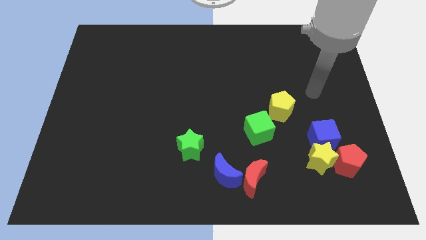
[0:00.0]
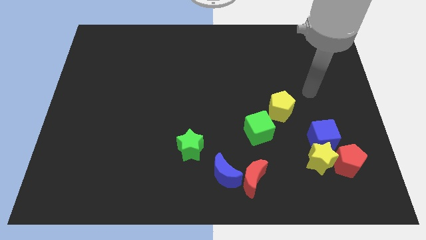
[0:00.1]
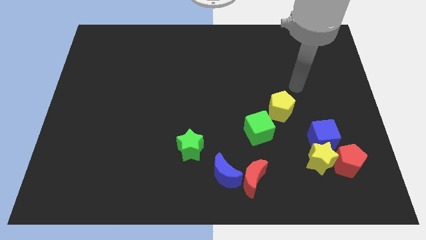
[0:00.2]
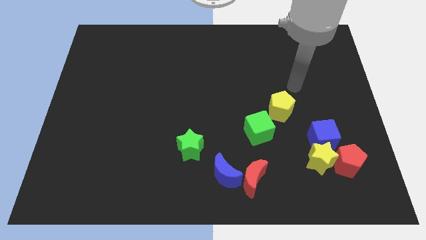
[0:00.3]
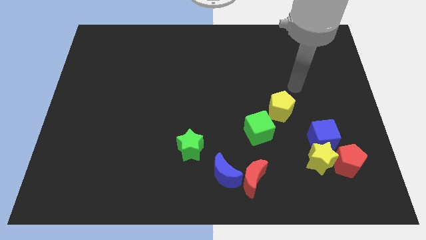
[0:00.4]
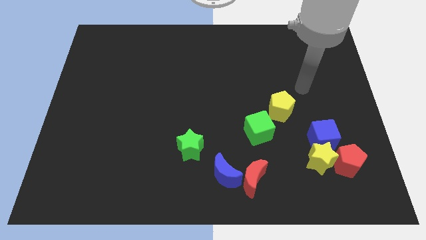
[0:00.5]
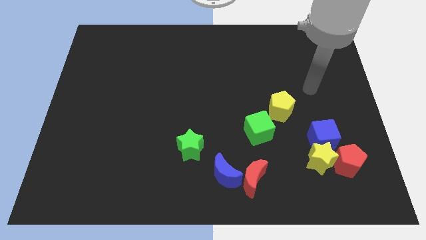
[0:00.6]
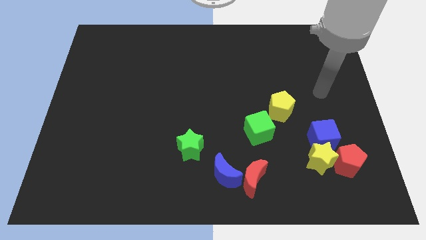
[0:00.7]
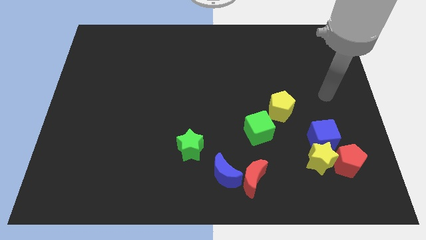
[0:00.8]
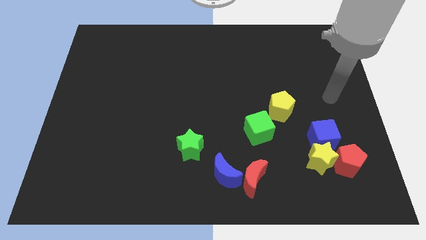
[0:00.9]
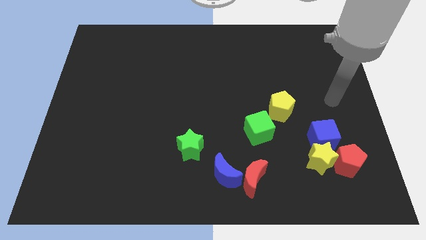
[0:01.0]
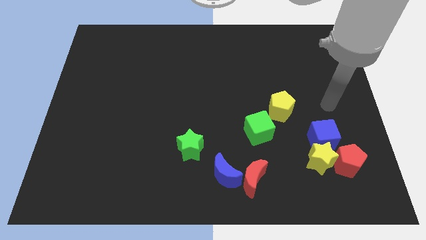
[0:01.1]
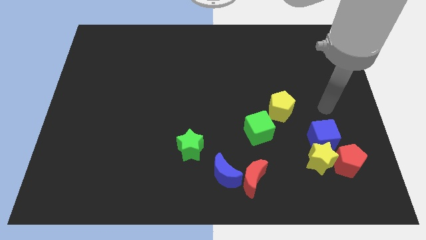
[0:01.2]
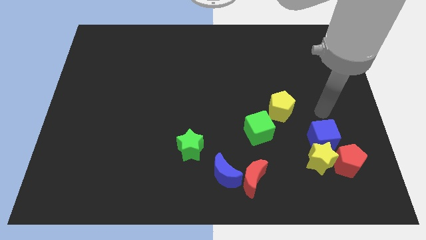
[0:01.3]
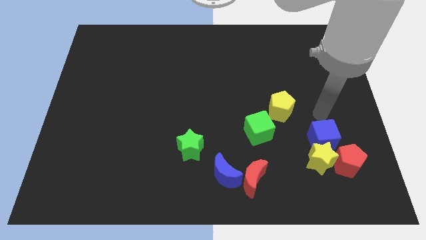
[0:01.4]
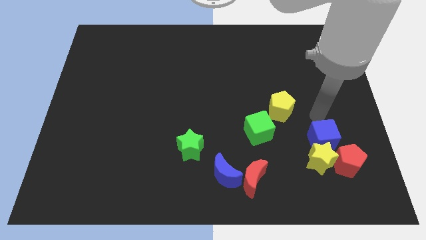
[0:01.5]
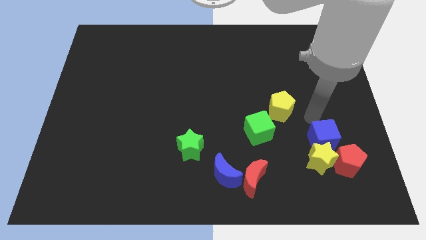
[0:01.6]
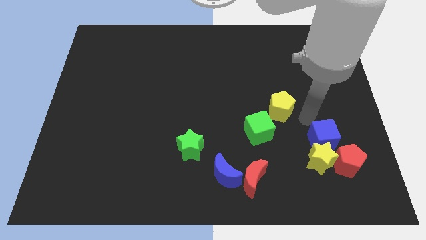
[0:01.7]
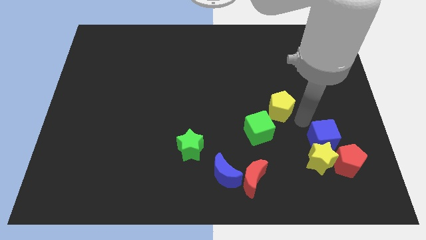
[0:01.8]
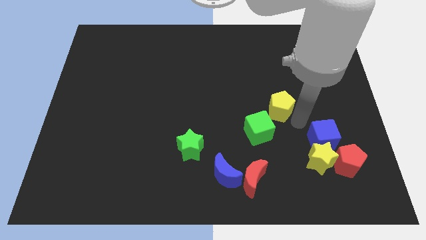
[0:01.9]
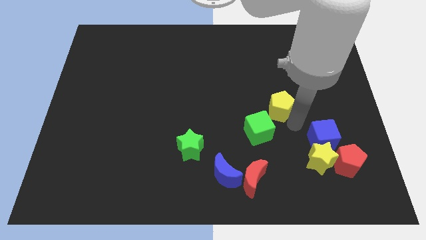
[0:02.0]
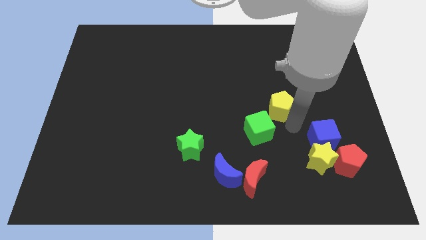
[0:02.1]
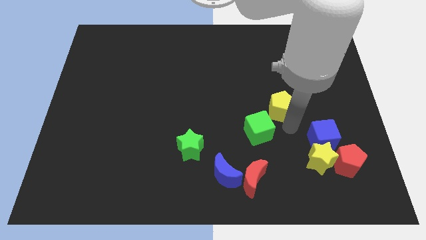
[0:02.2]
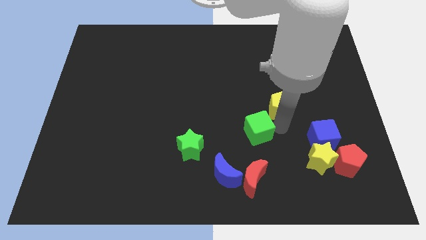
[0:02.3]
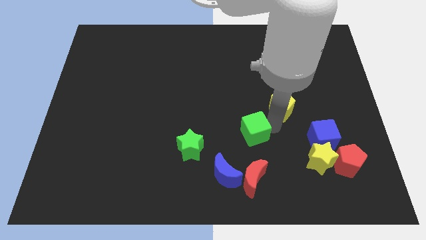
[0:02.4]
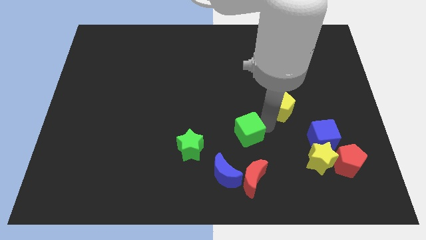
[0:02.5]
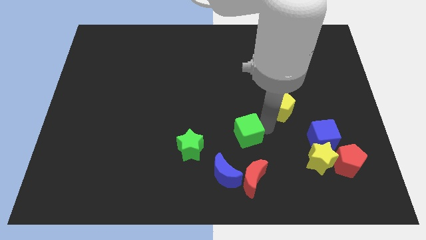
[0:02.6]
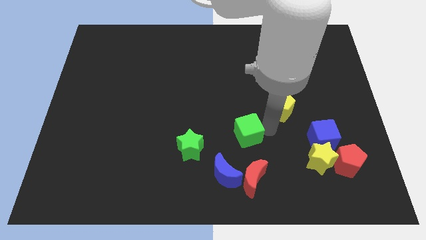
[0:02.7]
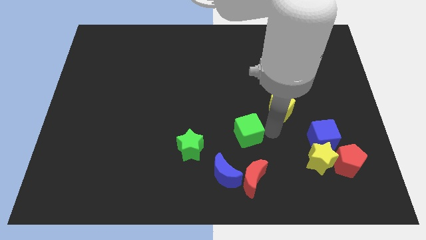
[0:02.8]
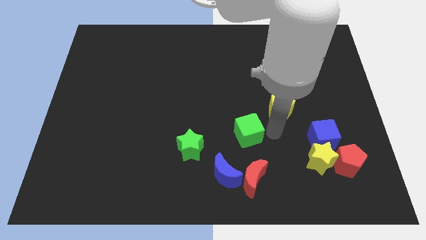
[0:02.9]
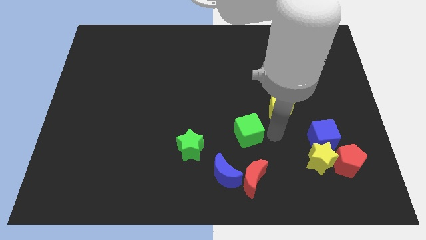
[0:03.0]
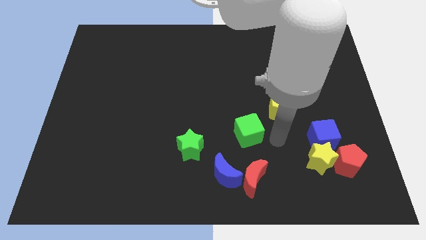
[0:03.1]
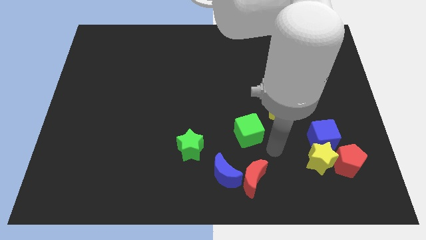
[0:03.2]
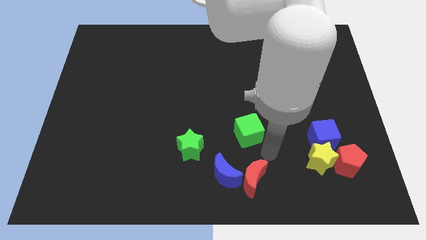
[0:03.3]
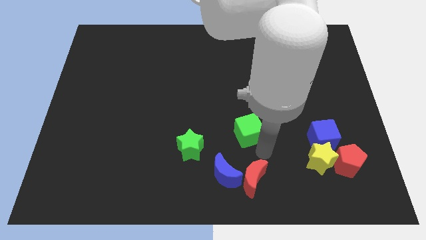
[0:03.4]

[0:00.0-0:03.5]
slightly move the green cube towards the green star

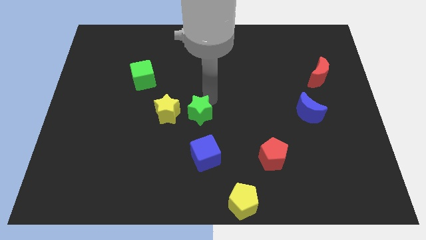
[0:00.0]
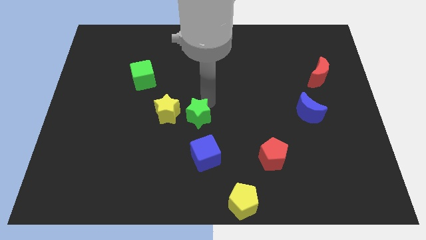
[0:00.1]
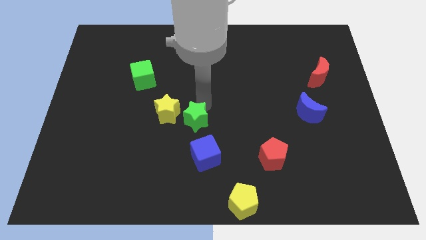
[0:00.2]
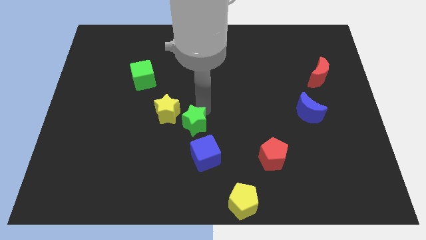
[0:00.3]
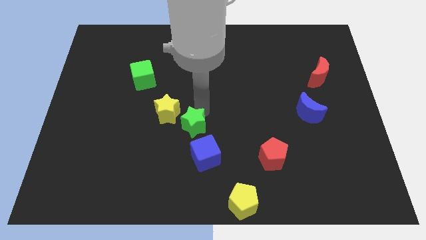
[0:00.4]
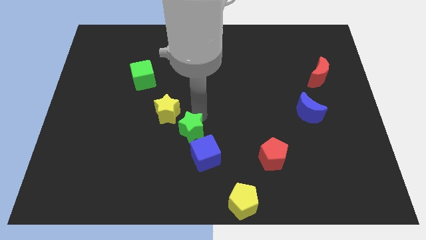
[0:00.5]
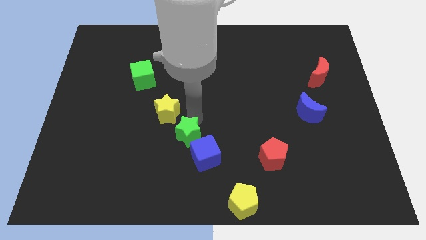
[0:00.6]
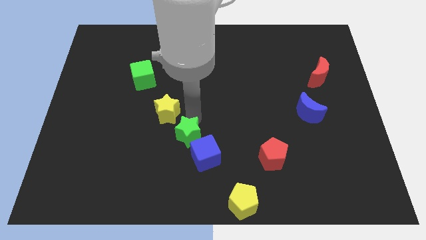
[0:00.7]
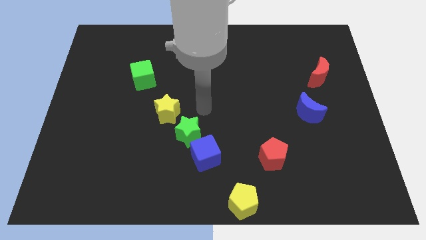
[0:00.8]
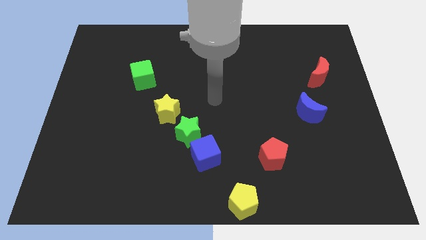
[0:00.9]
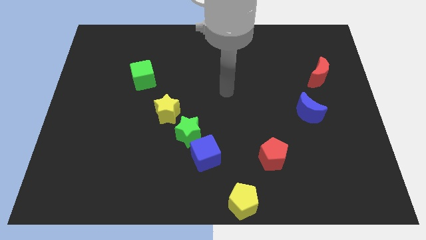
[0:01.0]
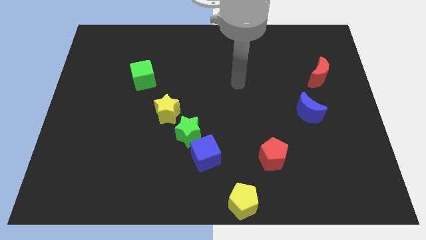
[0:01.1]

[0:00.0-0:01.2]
place the green star in between the yellow star and blue cube

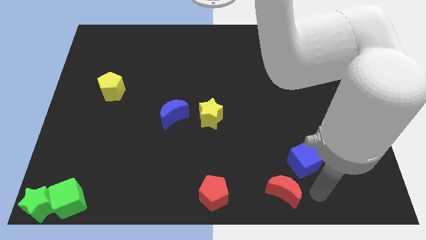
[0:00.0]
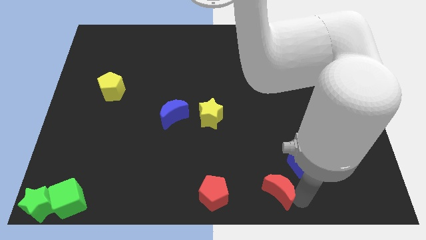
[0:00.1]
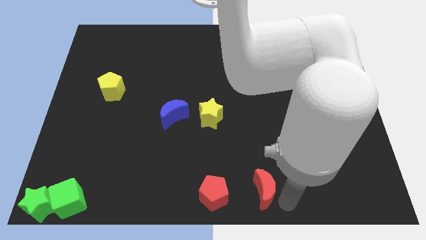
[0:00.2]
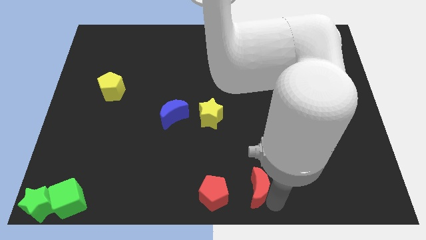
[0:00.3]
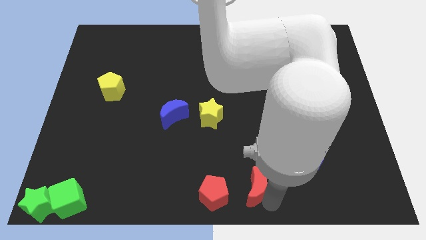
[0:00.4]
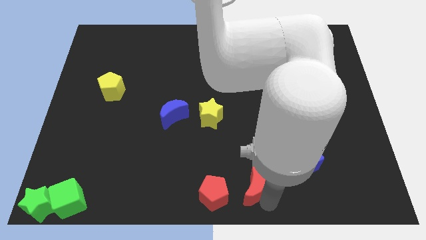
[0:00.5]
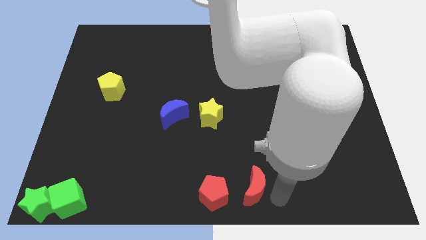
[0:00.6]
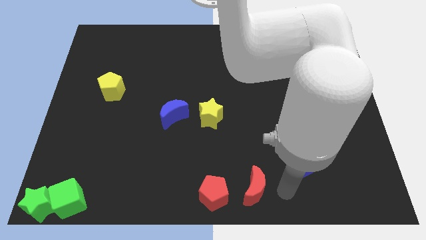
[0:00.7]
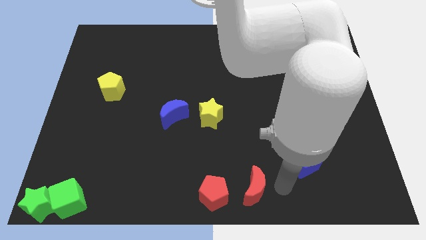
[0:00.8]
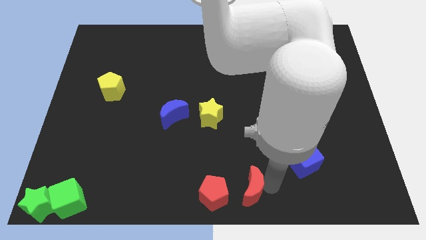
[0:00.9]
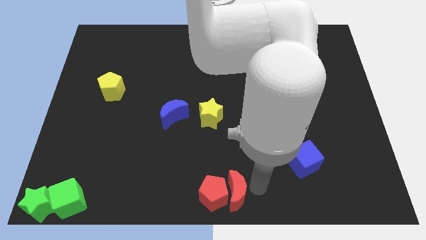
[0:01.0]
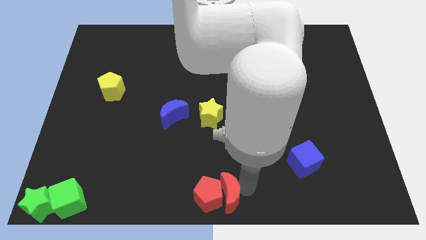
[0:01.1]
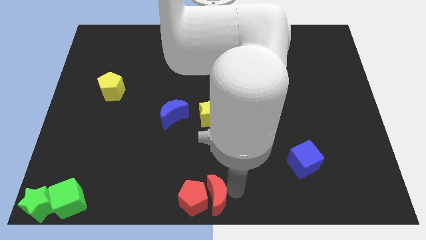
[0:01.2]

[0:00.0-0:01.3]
place red moon towards red pentagon

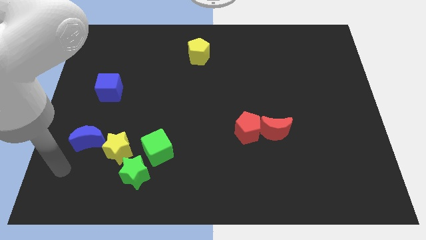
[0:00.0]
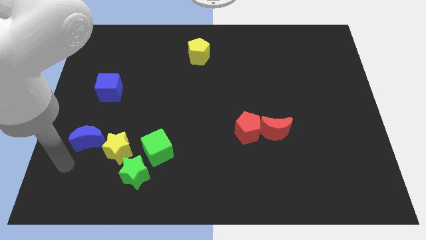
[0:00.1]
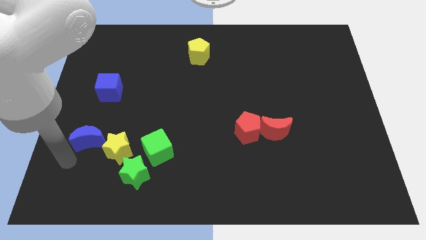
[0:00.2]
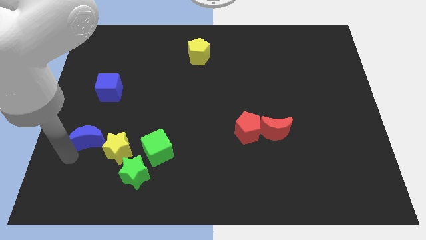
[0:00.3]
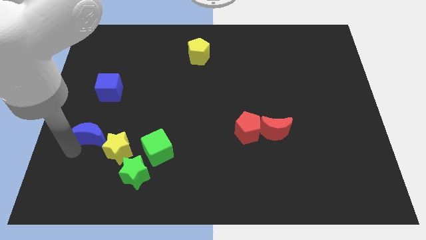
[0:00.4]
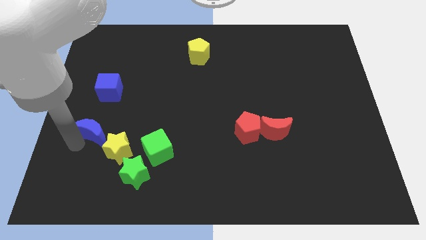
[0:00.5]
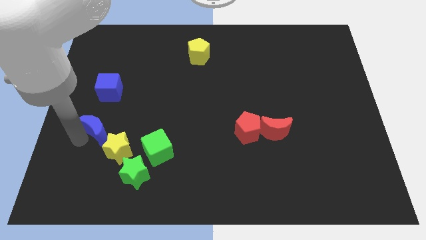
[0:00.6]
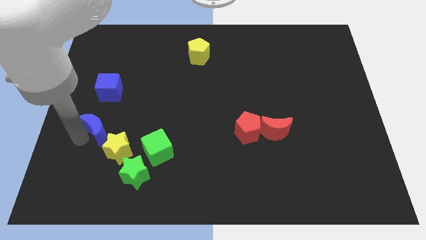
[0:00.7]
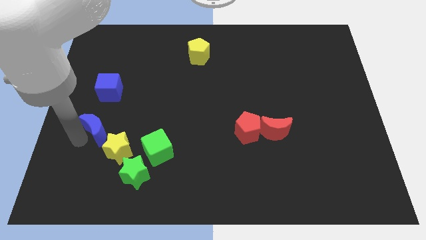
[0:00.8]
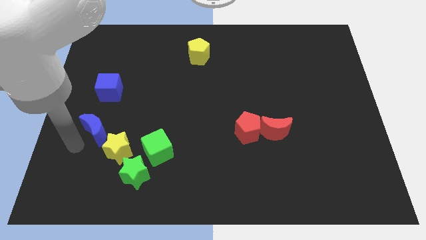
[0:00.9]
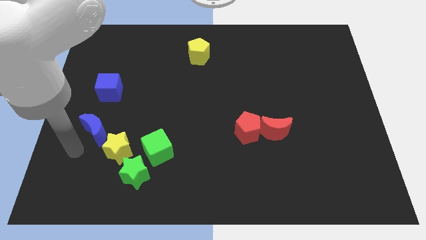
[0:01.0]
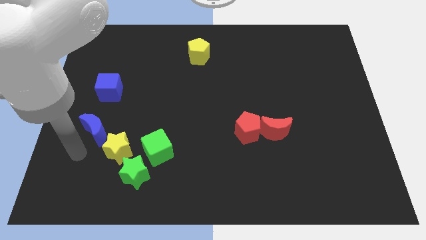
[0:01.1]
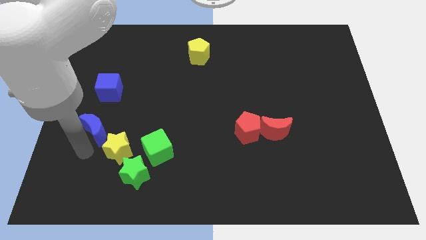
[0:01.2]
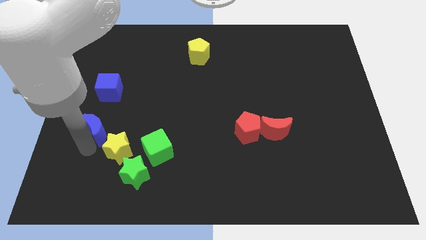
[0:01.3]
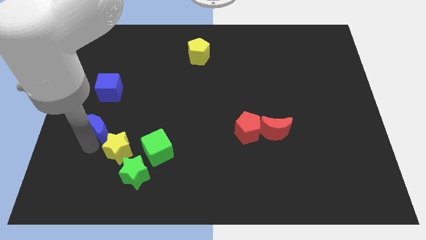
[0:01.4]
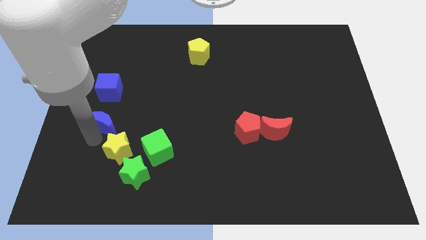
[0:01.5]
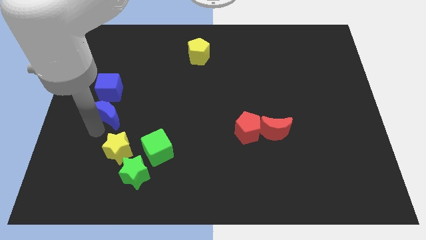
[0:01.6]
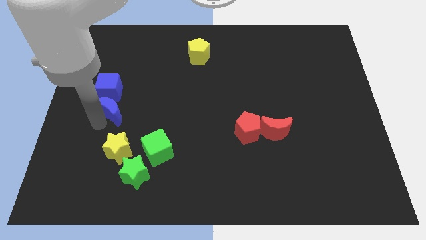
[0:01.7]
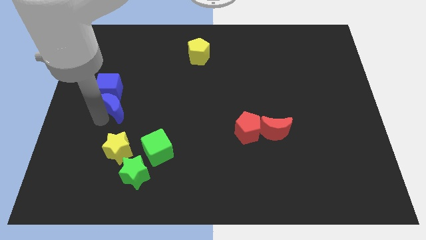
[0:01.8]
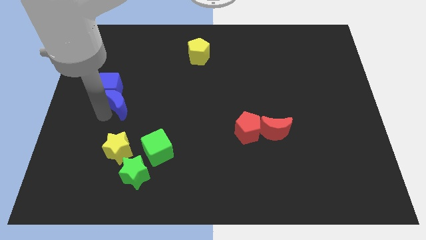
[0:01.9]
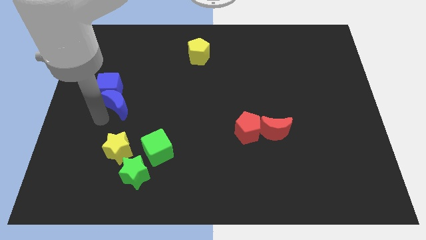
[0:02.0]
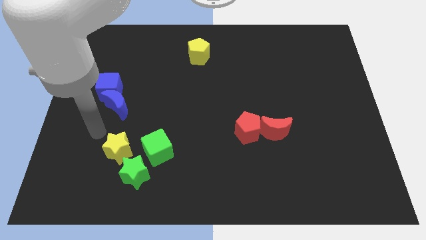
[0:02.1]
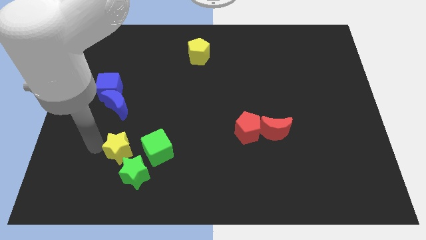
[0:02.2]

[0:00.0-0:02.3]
push the blue crescent into the blue cube

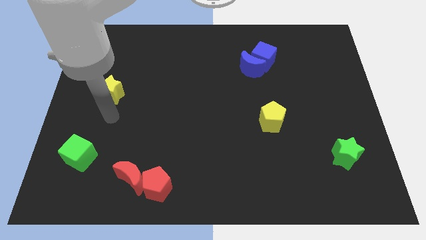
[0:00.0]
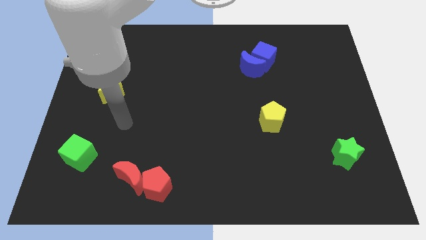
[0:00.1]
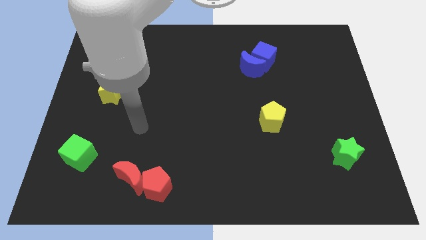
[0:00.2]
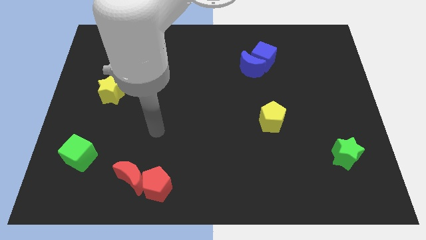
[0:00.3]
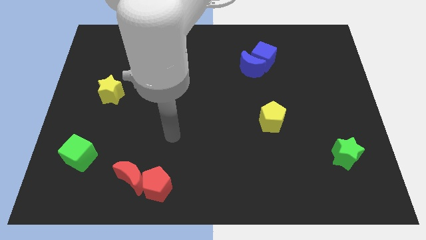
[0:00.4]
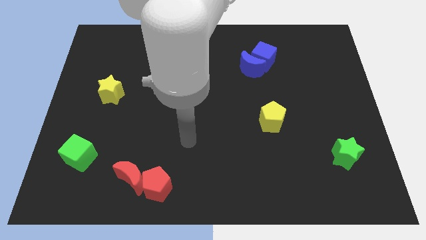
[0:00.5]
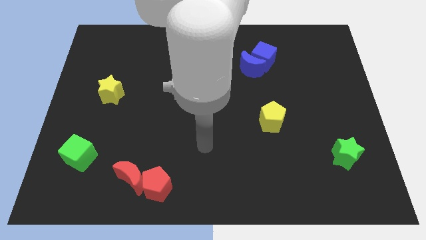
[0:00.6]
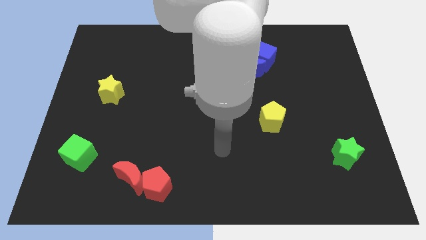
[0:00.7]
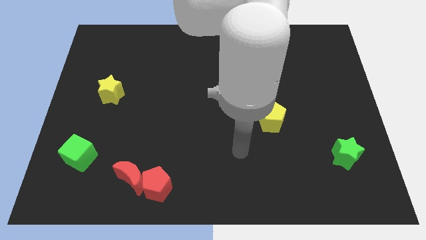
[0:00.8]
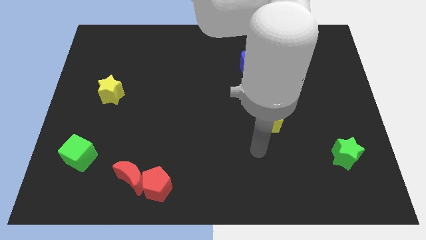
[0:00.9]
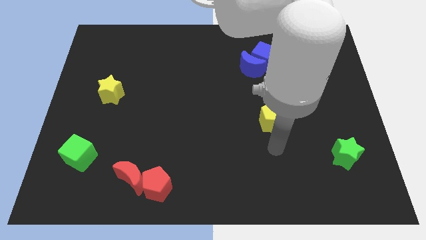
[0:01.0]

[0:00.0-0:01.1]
point your hand at the bottom side of the yellow pentagon
